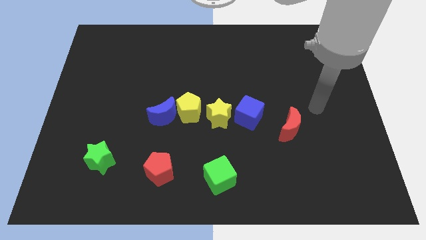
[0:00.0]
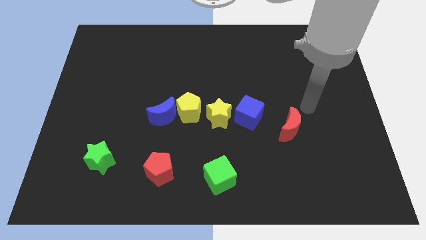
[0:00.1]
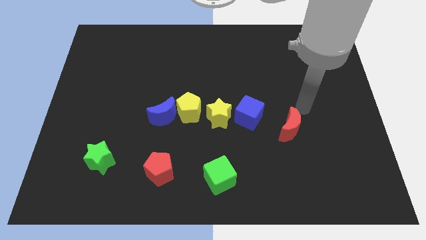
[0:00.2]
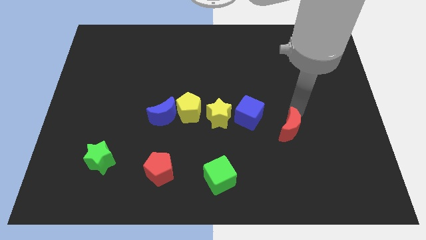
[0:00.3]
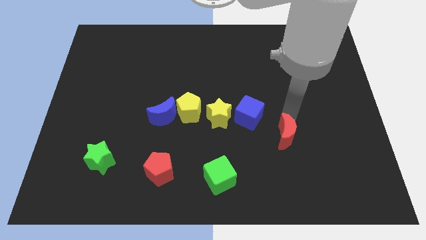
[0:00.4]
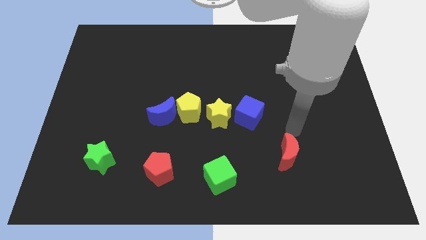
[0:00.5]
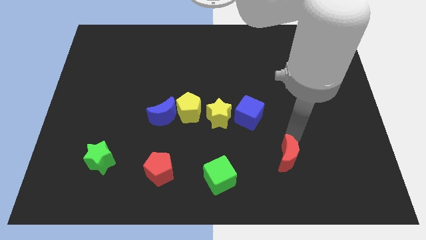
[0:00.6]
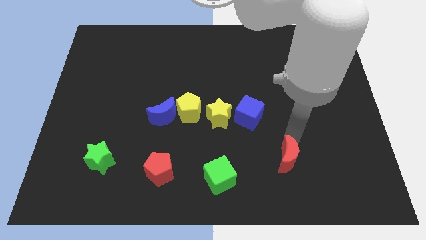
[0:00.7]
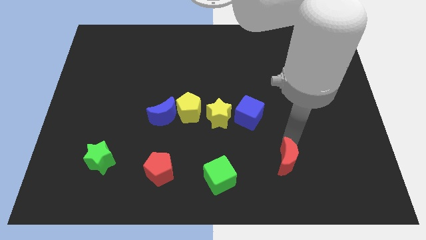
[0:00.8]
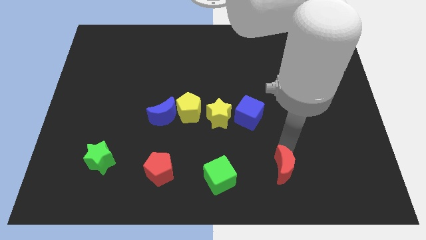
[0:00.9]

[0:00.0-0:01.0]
move the red crescent to the bottom of the board

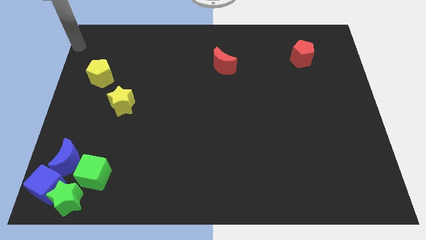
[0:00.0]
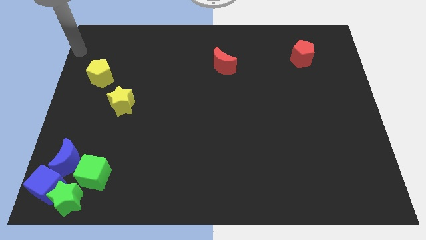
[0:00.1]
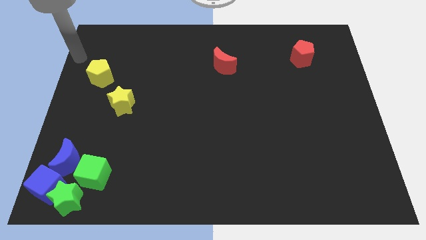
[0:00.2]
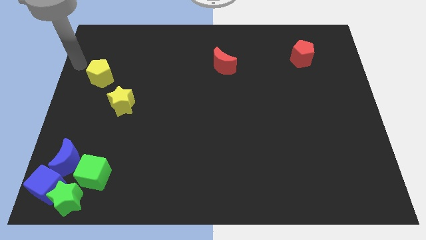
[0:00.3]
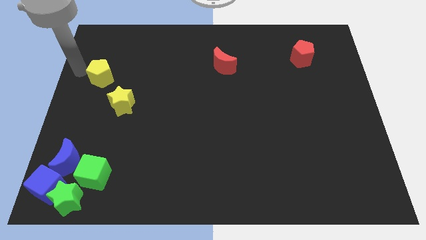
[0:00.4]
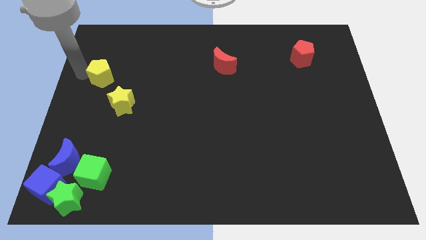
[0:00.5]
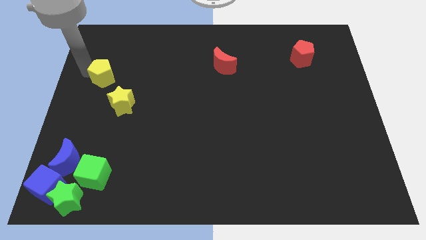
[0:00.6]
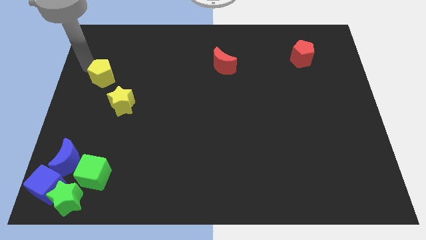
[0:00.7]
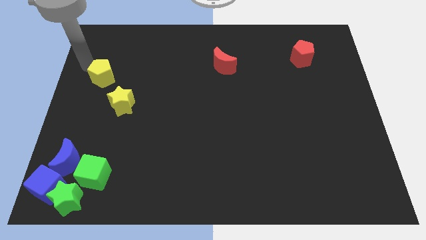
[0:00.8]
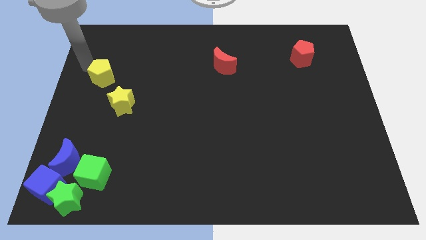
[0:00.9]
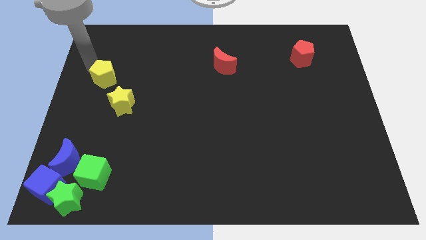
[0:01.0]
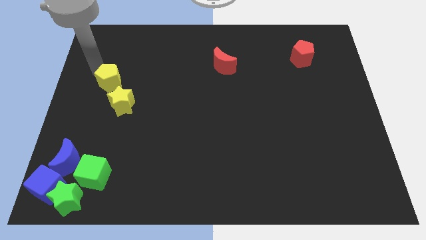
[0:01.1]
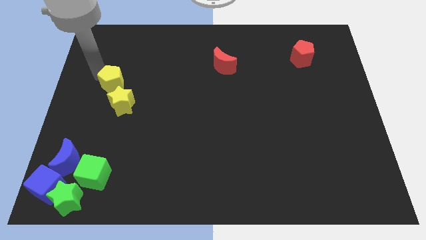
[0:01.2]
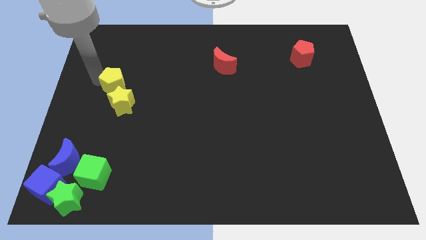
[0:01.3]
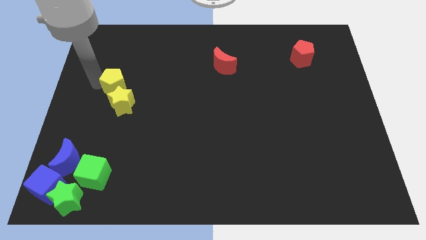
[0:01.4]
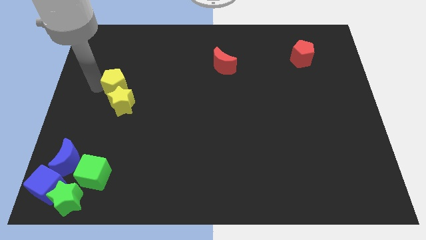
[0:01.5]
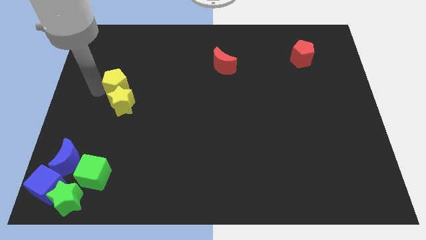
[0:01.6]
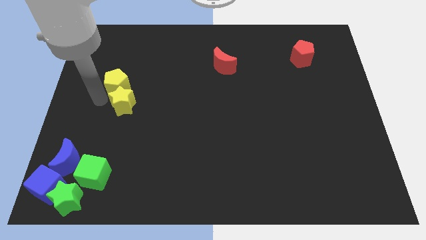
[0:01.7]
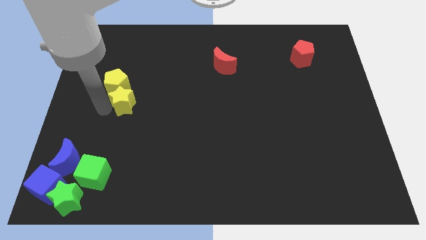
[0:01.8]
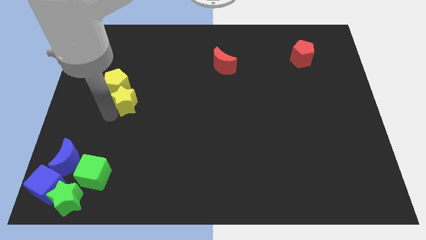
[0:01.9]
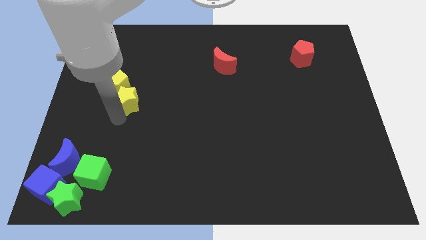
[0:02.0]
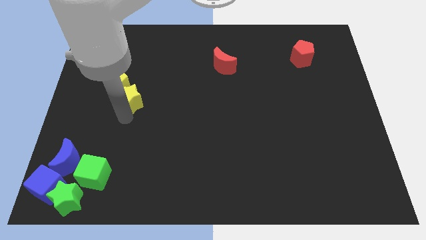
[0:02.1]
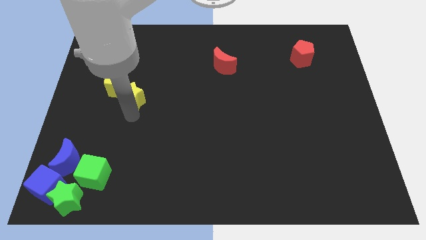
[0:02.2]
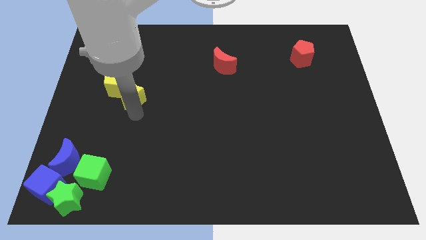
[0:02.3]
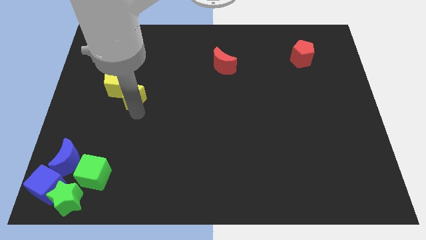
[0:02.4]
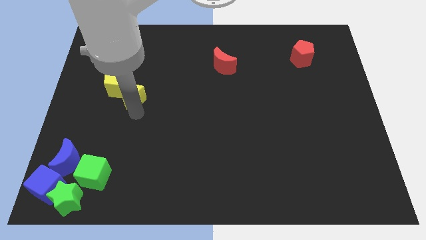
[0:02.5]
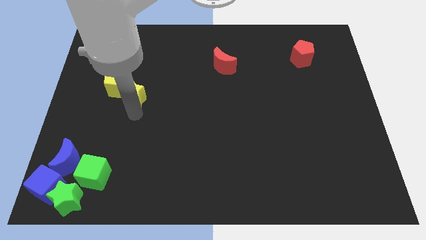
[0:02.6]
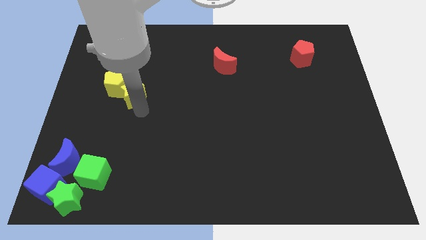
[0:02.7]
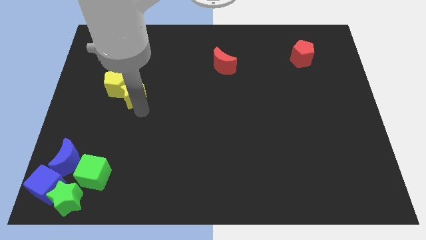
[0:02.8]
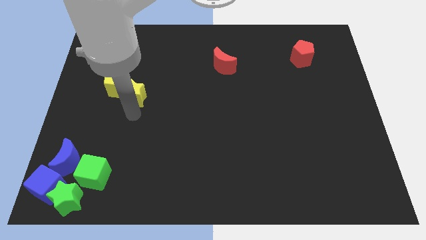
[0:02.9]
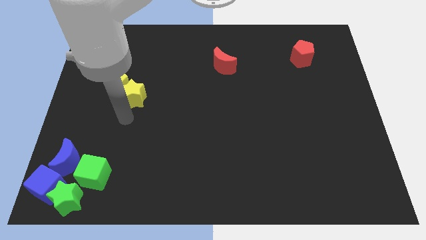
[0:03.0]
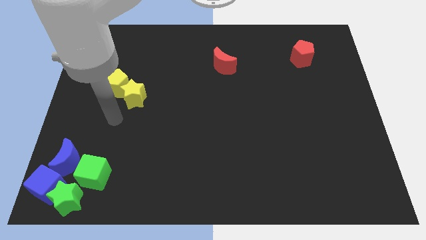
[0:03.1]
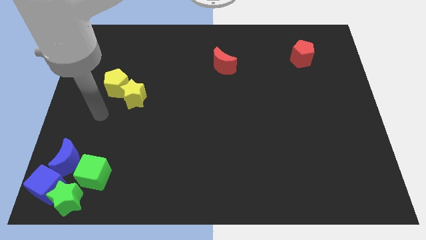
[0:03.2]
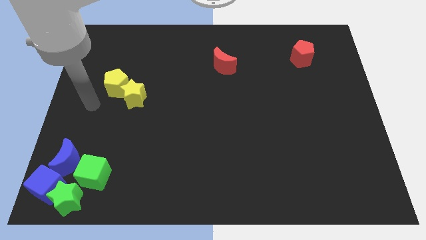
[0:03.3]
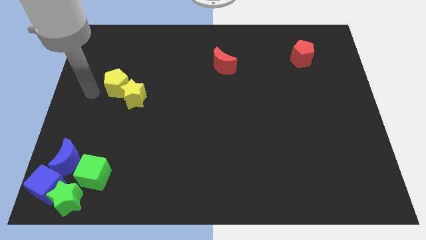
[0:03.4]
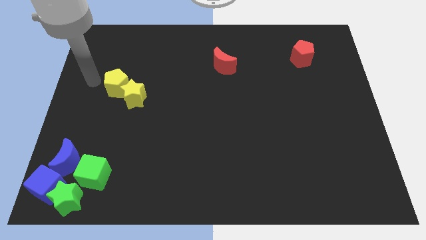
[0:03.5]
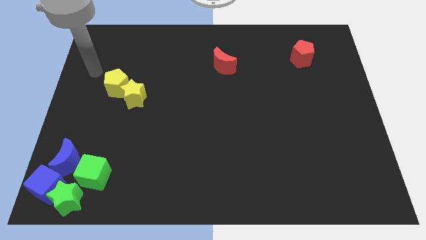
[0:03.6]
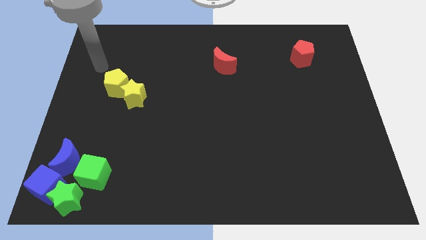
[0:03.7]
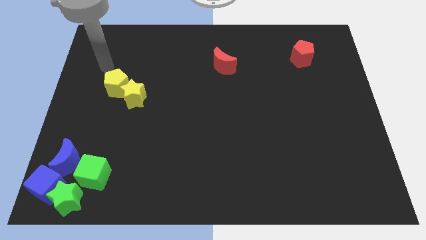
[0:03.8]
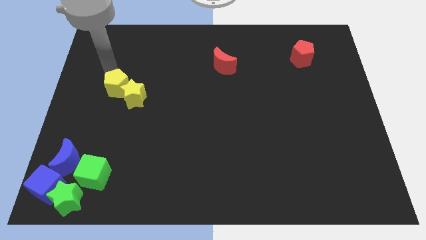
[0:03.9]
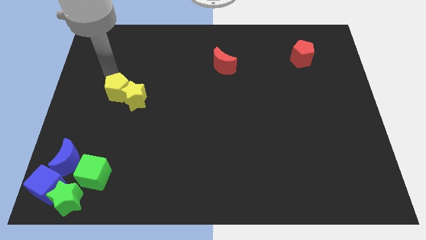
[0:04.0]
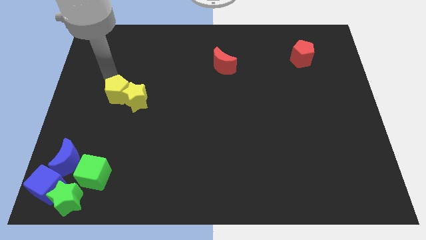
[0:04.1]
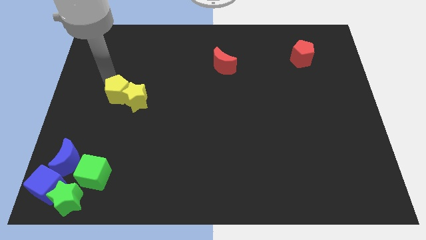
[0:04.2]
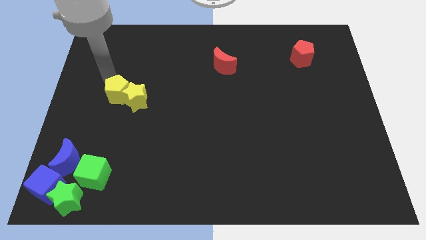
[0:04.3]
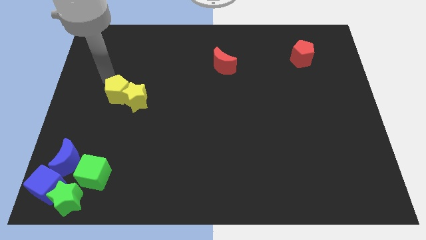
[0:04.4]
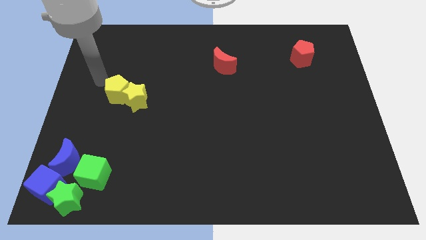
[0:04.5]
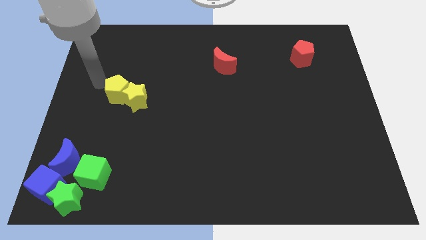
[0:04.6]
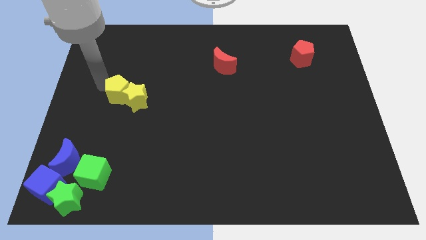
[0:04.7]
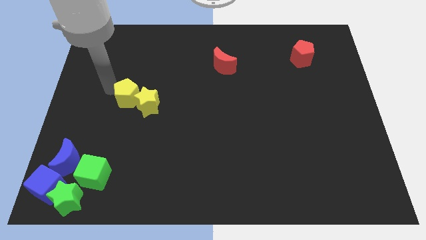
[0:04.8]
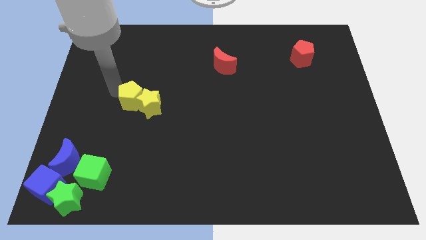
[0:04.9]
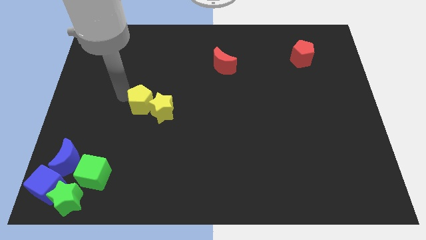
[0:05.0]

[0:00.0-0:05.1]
push the yellow pentagon into the yellow star

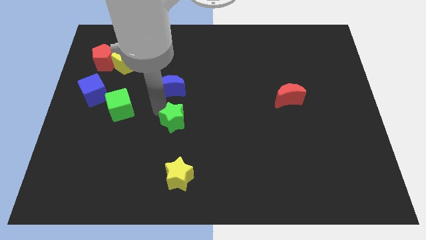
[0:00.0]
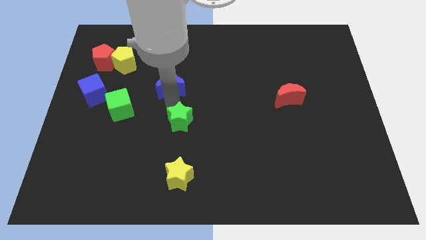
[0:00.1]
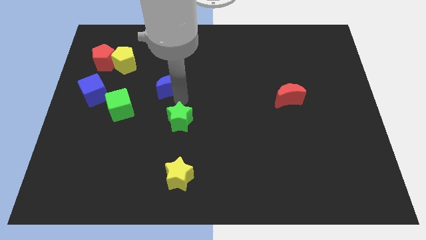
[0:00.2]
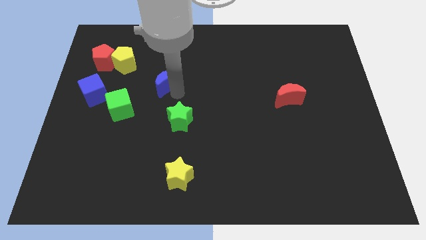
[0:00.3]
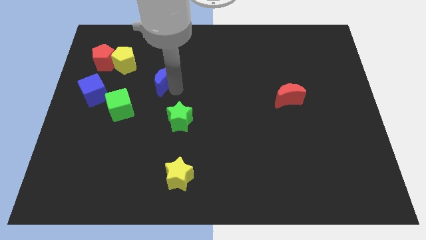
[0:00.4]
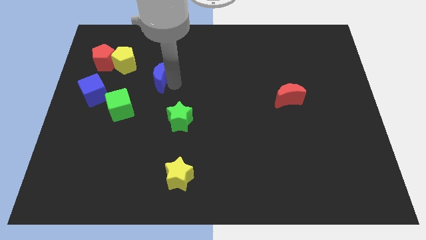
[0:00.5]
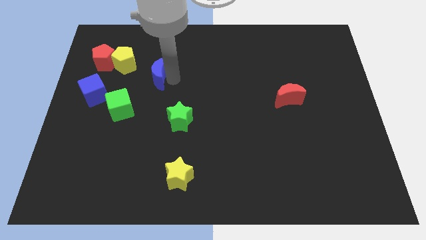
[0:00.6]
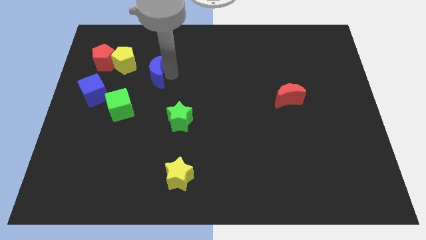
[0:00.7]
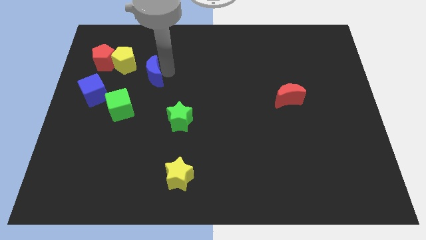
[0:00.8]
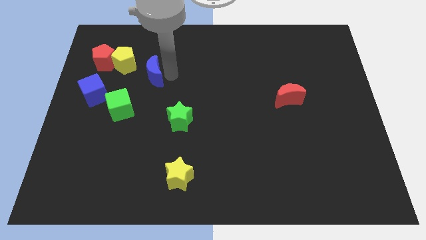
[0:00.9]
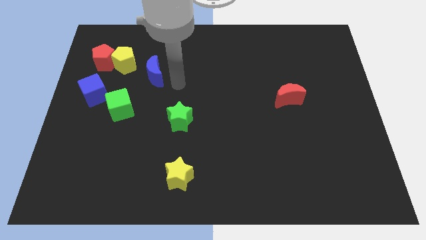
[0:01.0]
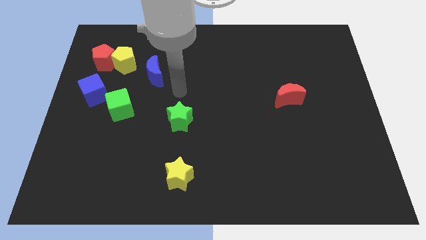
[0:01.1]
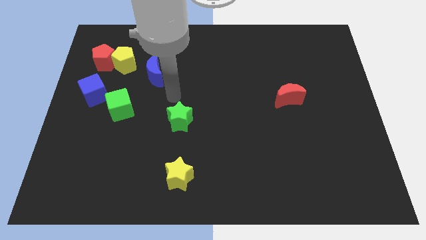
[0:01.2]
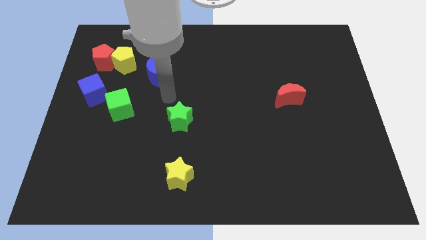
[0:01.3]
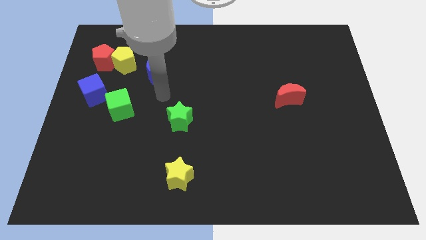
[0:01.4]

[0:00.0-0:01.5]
push the blue moon right to the yellow pentagon

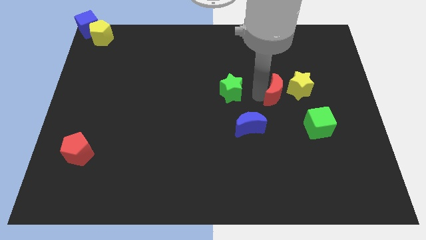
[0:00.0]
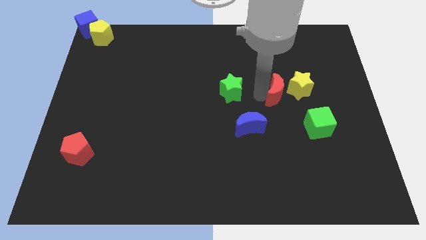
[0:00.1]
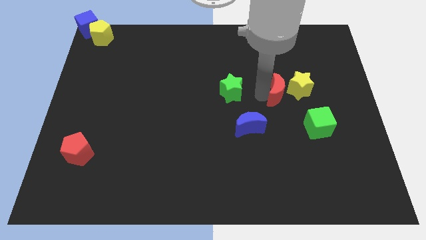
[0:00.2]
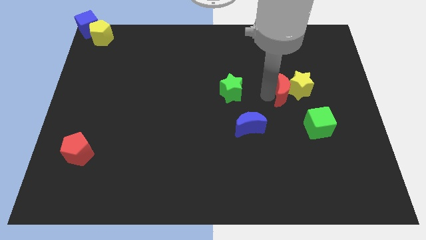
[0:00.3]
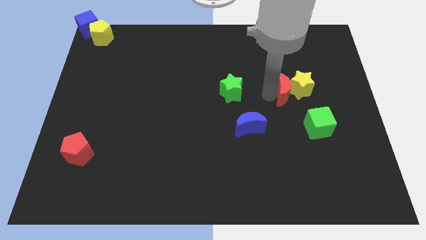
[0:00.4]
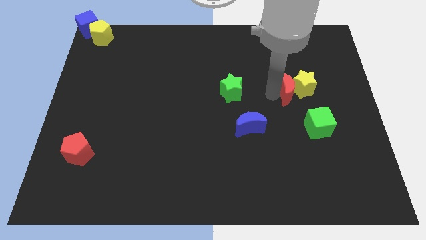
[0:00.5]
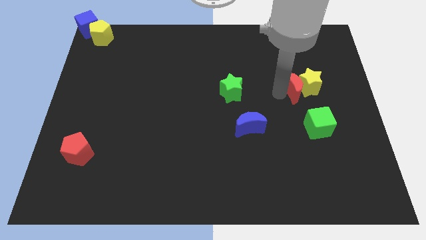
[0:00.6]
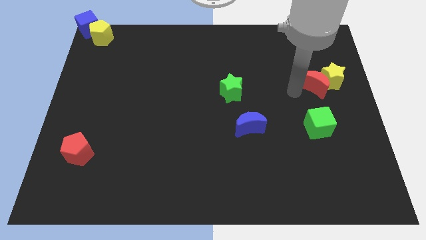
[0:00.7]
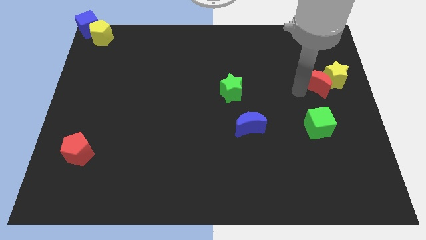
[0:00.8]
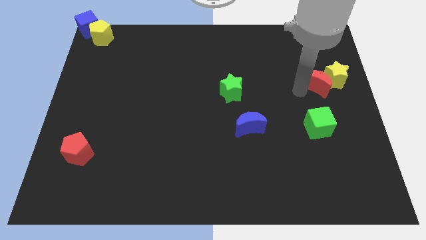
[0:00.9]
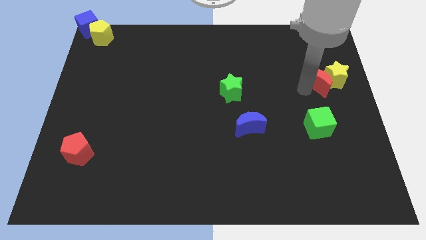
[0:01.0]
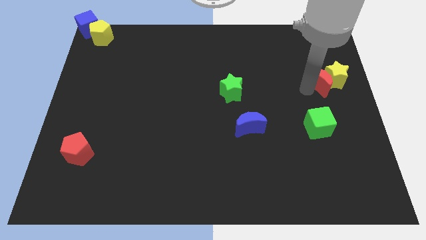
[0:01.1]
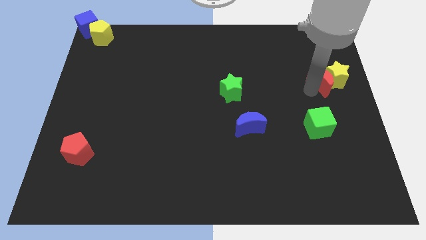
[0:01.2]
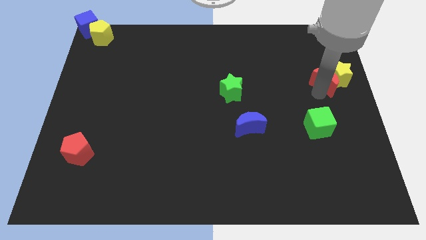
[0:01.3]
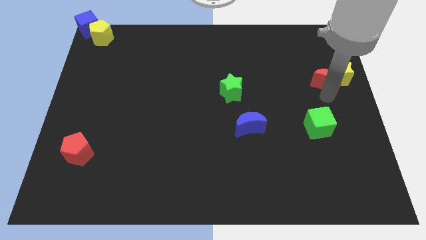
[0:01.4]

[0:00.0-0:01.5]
push the red crescent and the yellow star to the right side of the table
